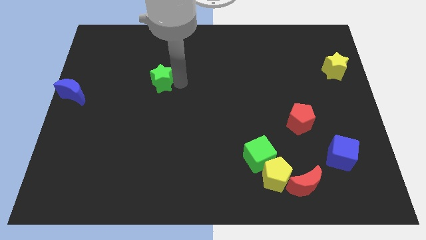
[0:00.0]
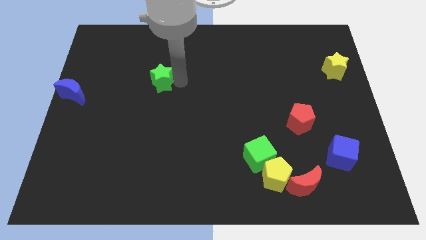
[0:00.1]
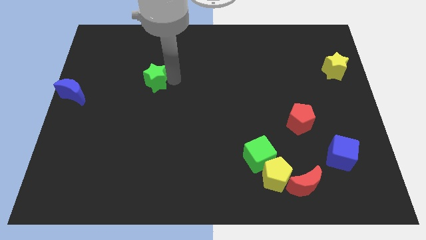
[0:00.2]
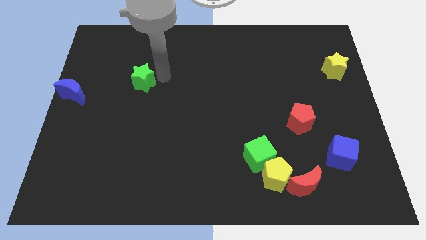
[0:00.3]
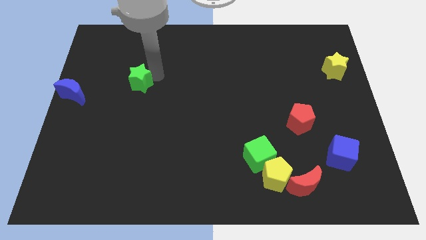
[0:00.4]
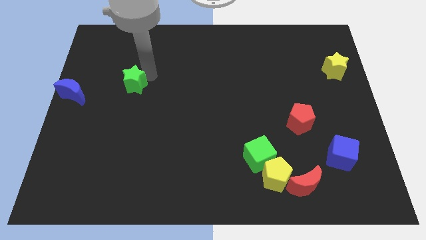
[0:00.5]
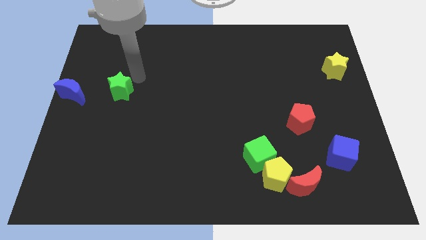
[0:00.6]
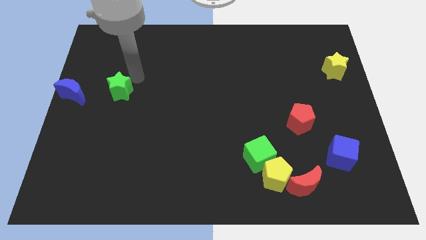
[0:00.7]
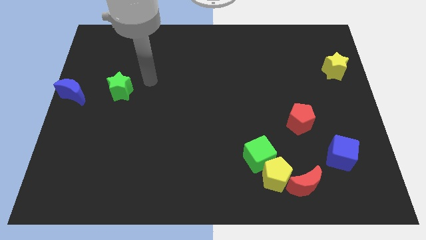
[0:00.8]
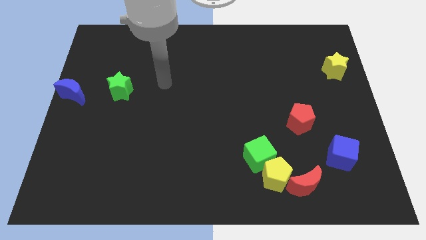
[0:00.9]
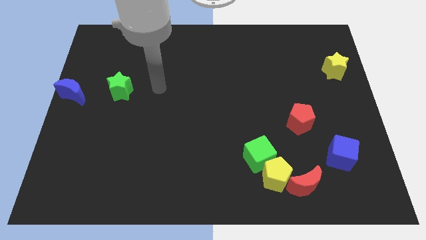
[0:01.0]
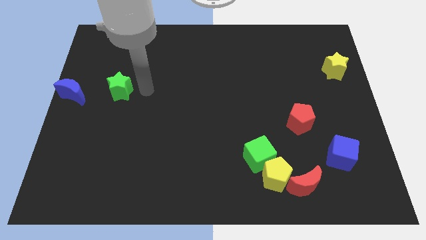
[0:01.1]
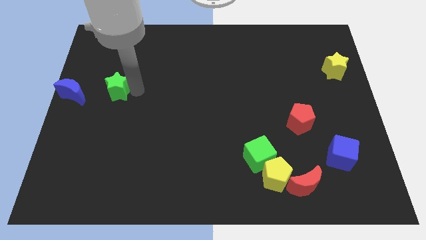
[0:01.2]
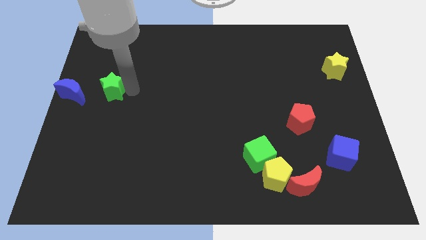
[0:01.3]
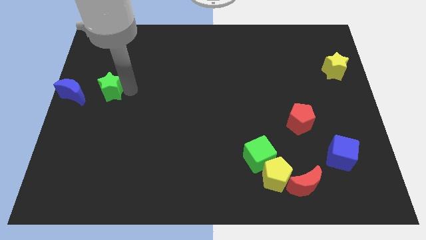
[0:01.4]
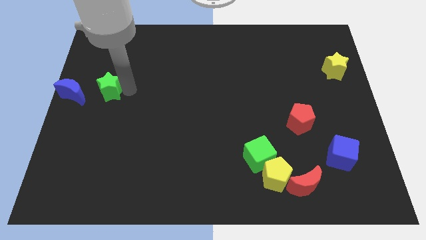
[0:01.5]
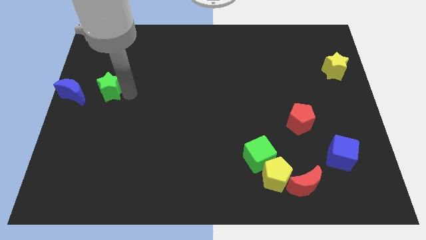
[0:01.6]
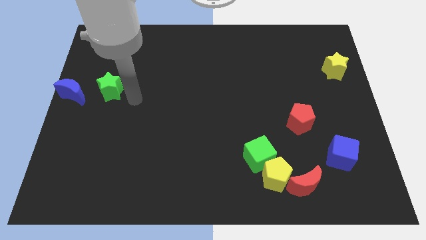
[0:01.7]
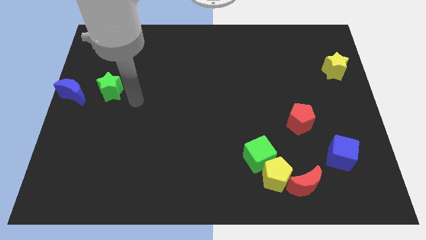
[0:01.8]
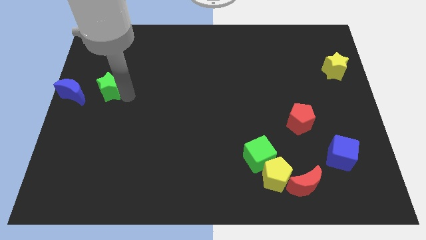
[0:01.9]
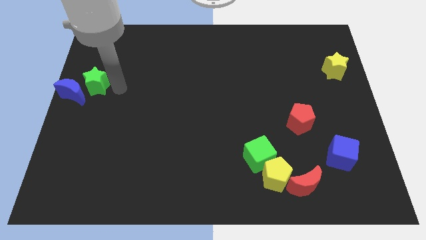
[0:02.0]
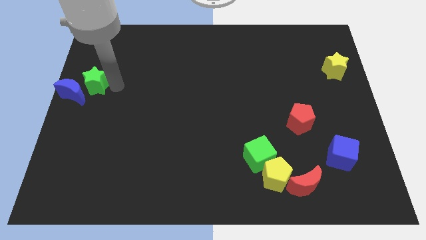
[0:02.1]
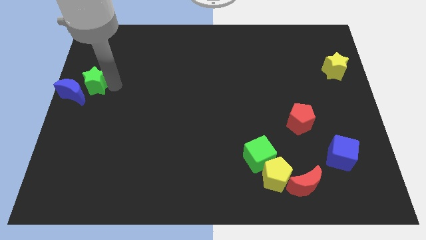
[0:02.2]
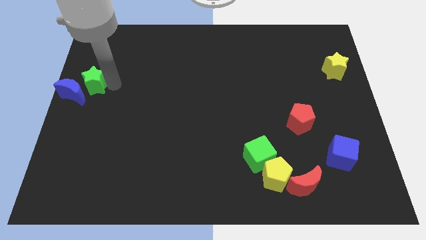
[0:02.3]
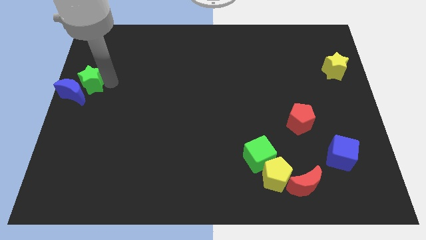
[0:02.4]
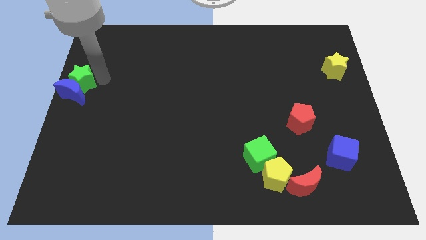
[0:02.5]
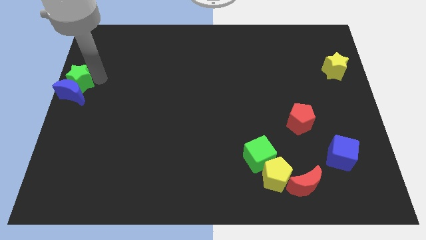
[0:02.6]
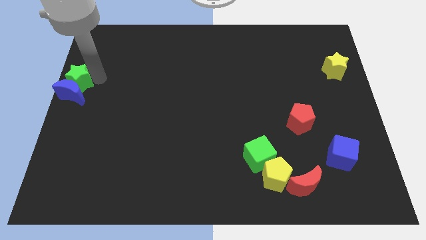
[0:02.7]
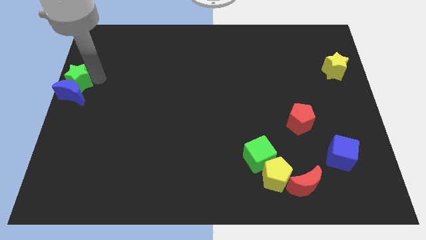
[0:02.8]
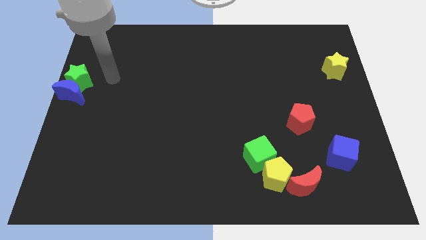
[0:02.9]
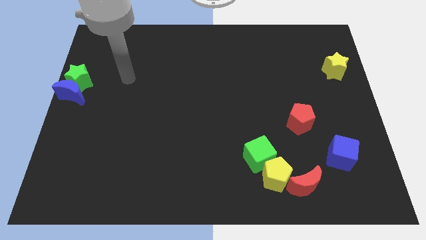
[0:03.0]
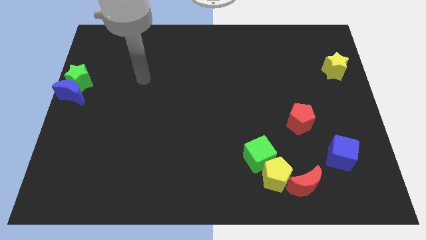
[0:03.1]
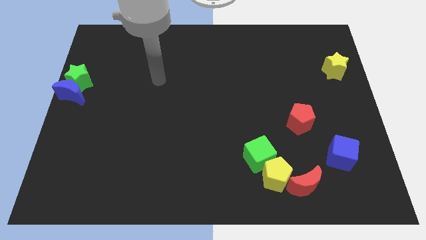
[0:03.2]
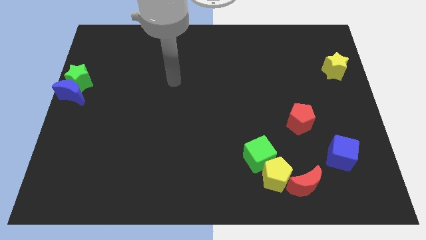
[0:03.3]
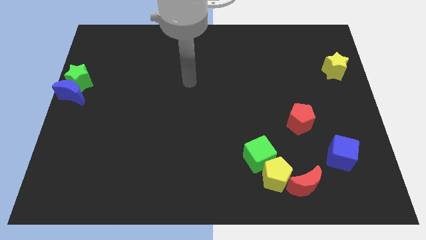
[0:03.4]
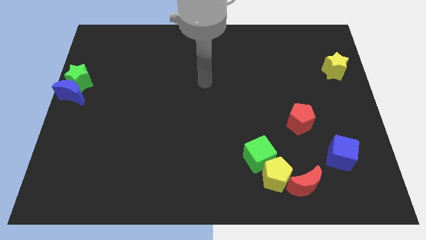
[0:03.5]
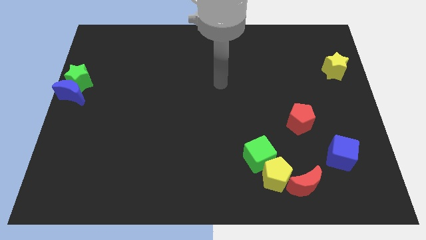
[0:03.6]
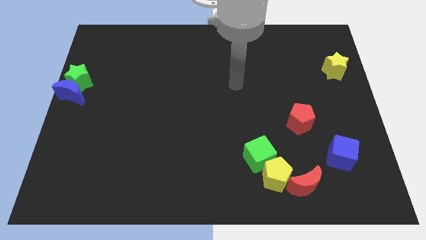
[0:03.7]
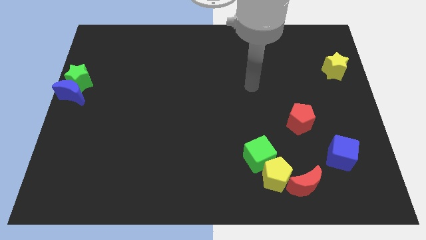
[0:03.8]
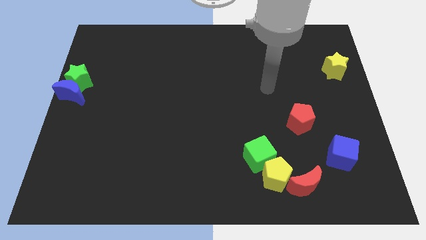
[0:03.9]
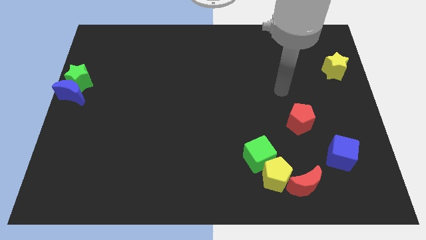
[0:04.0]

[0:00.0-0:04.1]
place the green star on top of the blue crescent

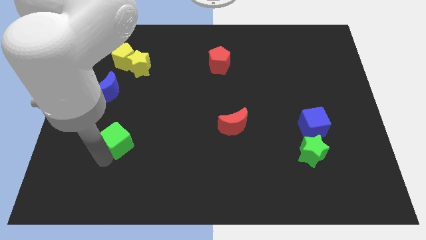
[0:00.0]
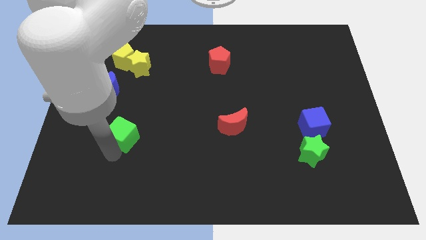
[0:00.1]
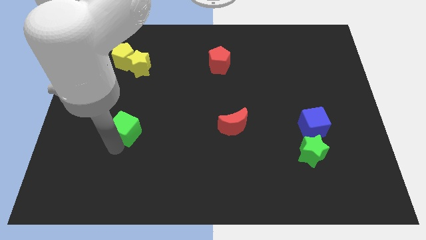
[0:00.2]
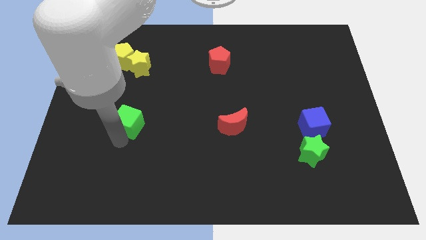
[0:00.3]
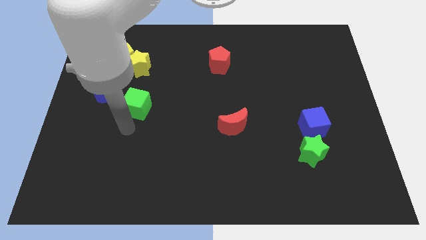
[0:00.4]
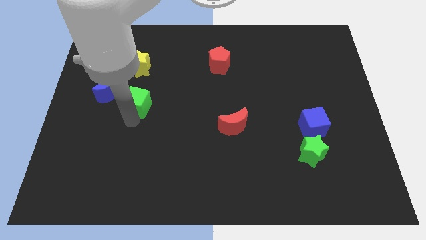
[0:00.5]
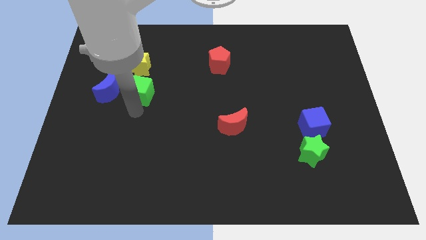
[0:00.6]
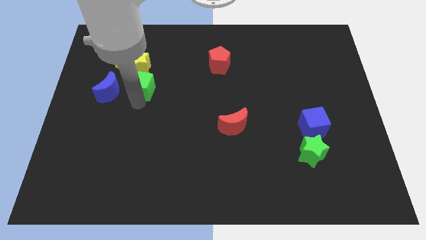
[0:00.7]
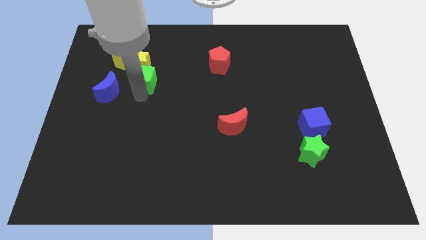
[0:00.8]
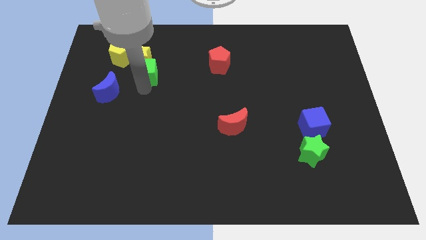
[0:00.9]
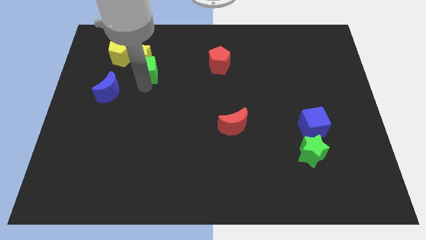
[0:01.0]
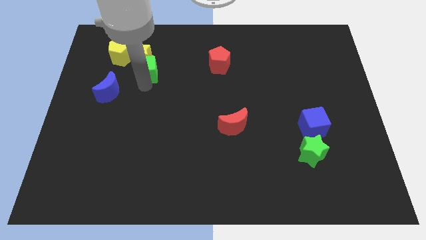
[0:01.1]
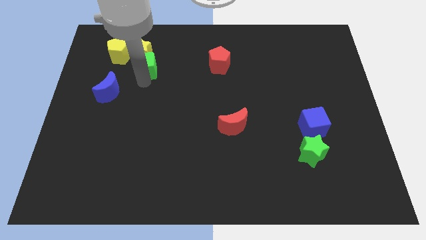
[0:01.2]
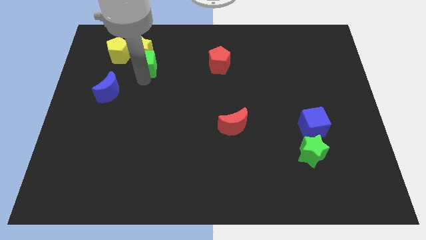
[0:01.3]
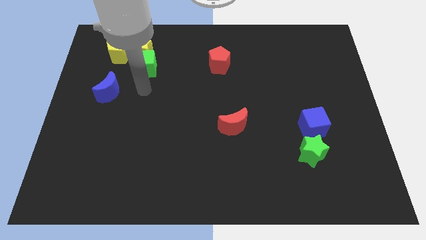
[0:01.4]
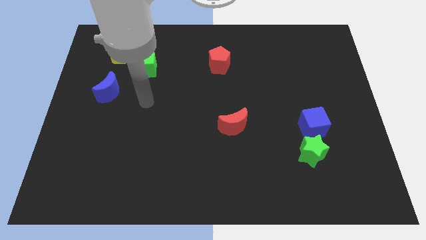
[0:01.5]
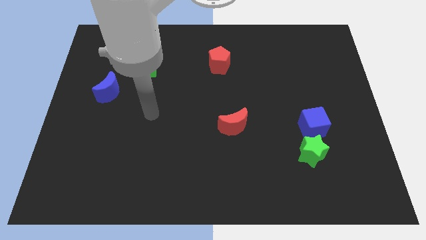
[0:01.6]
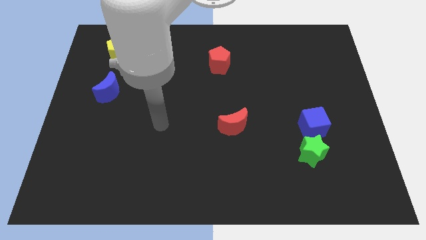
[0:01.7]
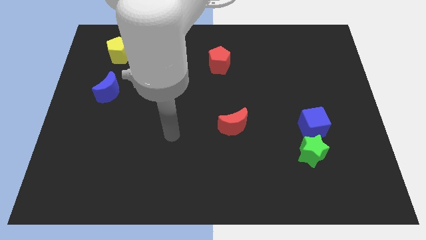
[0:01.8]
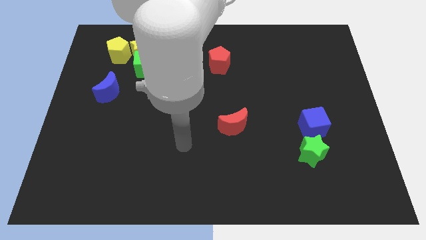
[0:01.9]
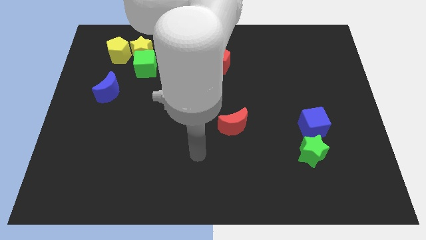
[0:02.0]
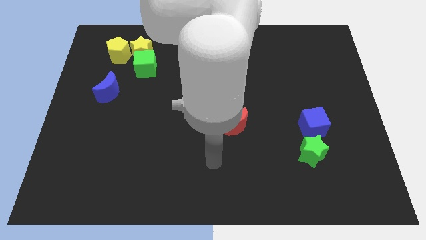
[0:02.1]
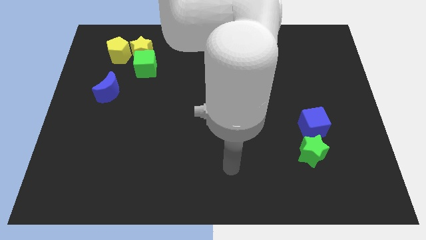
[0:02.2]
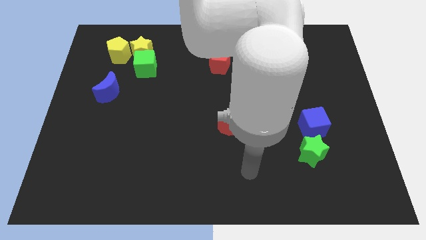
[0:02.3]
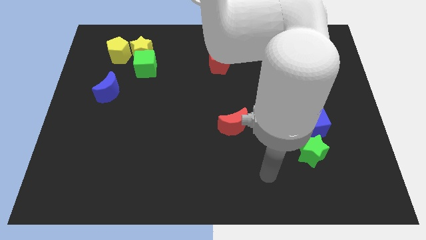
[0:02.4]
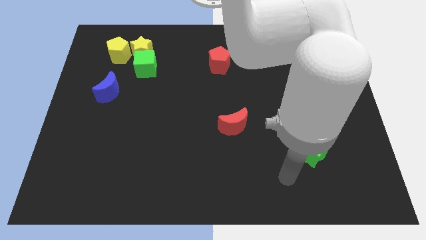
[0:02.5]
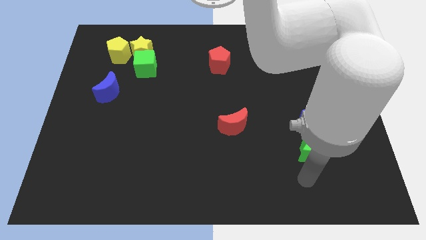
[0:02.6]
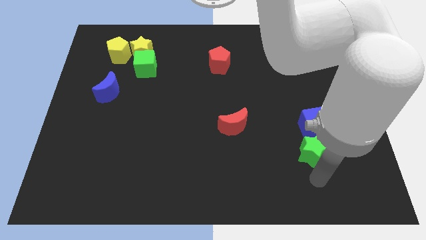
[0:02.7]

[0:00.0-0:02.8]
push the green cube into the yellow star

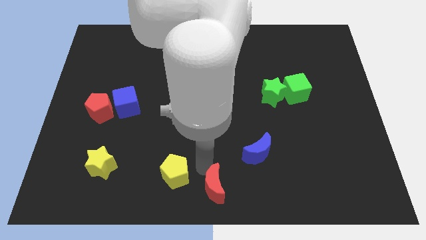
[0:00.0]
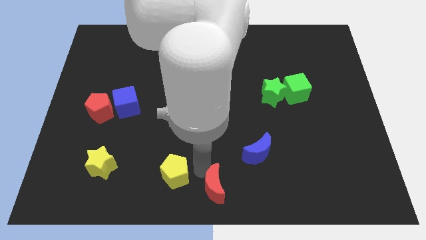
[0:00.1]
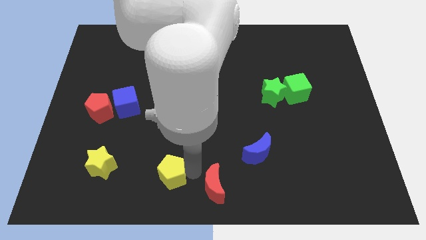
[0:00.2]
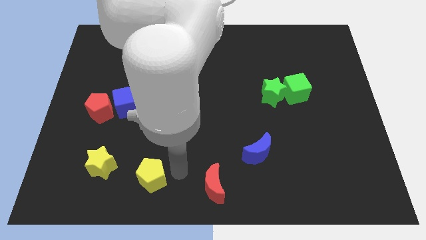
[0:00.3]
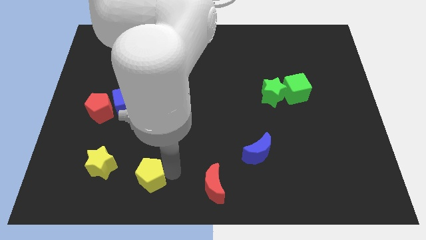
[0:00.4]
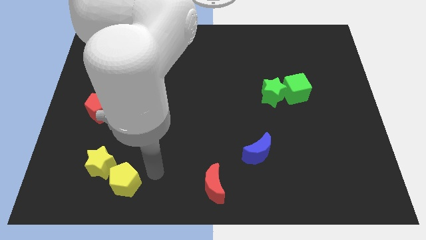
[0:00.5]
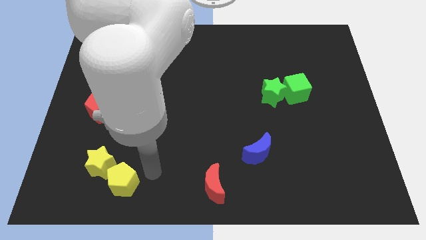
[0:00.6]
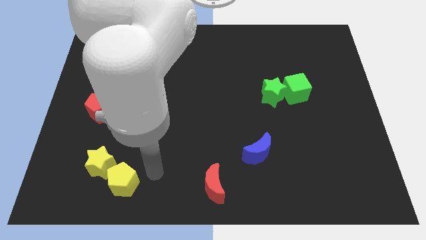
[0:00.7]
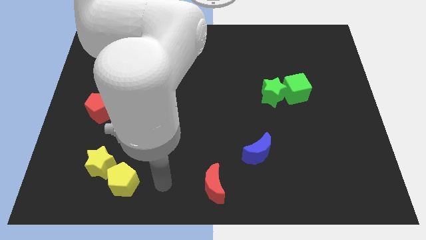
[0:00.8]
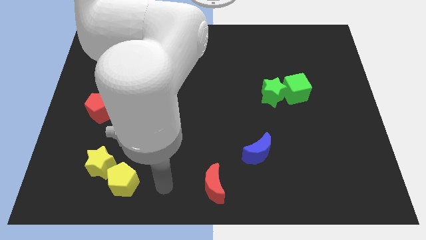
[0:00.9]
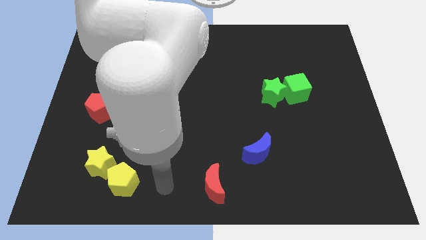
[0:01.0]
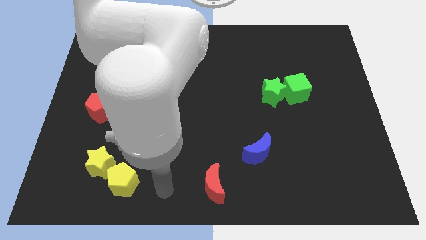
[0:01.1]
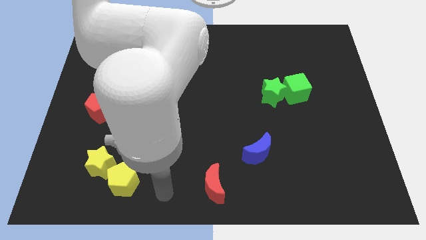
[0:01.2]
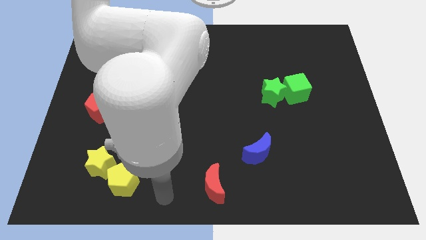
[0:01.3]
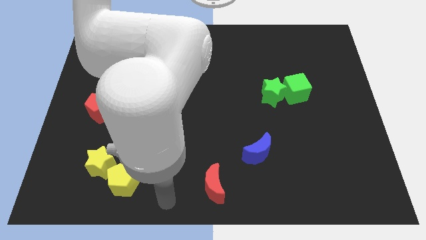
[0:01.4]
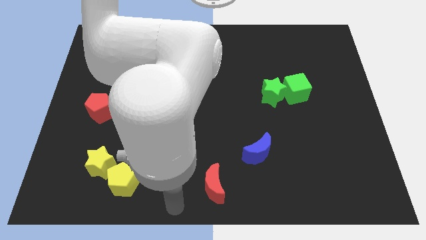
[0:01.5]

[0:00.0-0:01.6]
push the yellow pentagon to the bottom right side of the yellow star

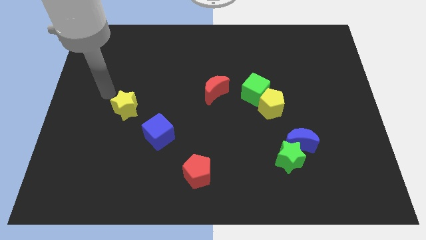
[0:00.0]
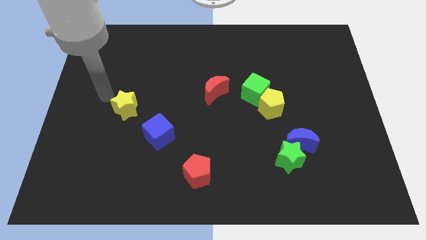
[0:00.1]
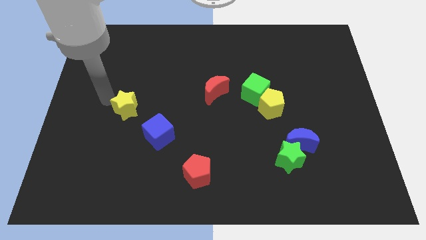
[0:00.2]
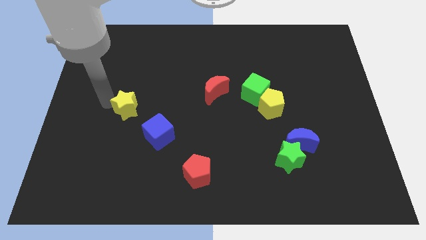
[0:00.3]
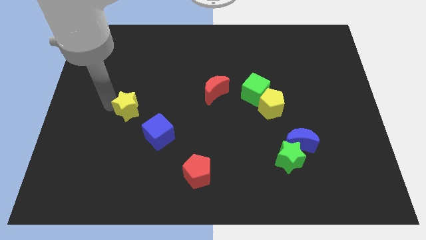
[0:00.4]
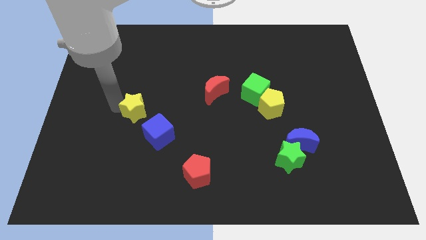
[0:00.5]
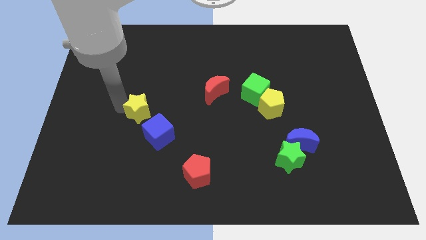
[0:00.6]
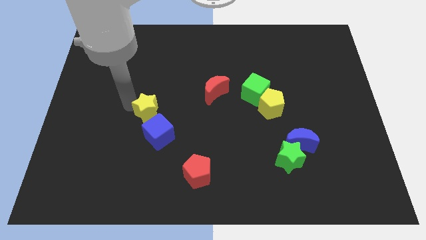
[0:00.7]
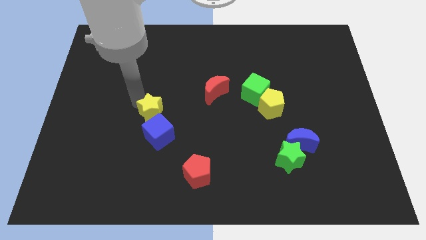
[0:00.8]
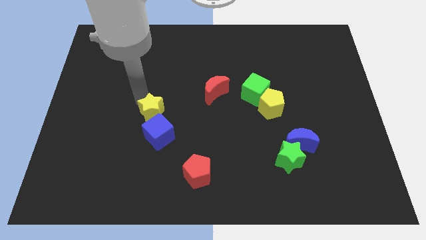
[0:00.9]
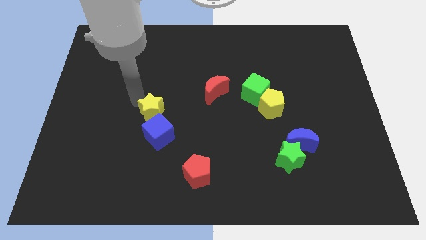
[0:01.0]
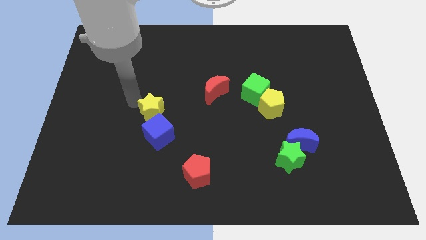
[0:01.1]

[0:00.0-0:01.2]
move the yellow star to the top of the blue cube
